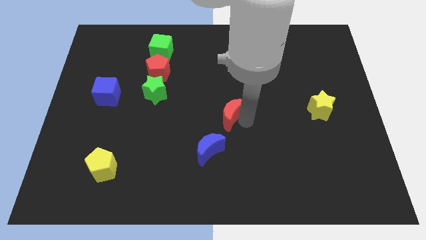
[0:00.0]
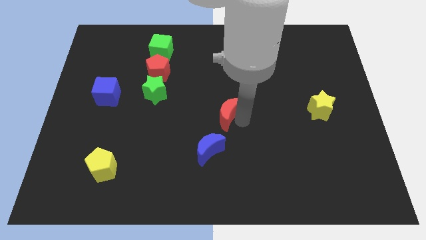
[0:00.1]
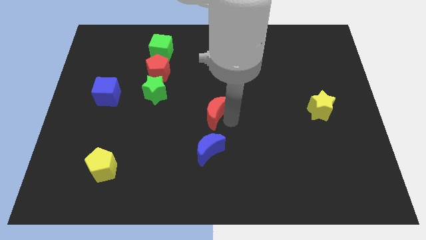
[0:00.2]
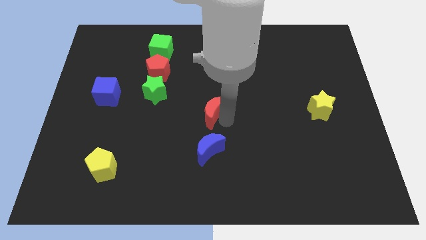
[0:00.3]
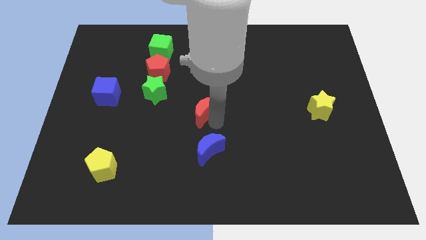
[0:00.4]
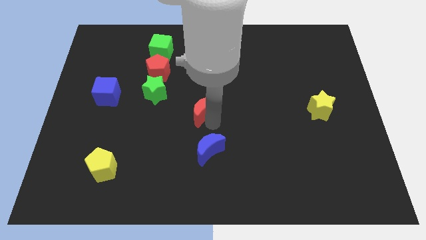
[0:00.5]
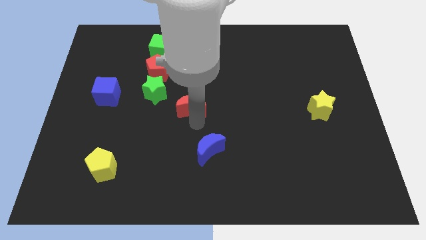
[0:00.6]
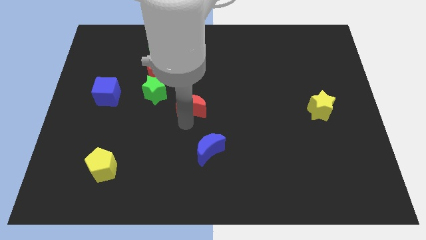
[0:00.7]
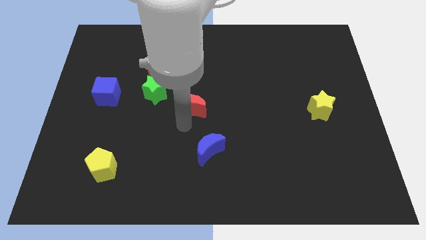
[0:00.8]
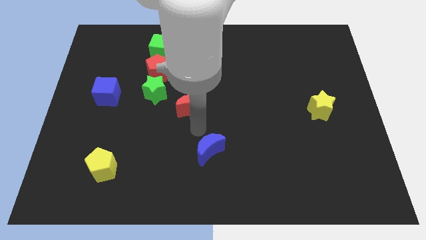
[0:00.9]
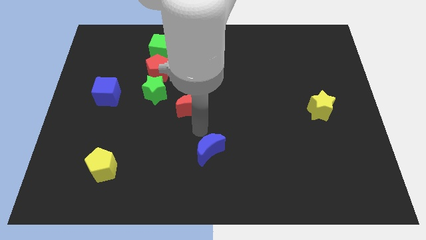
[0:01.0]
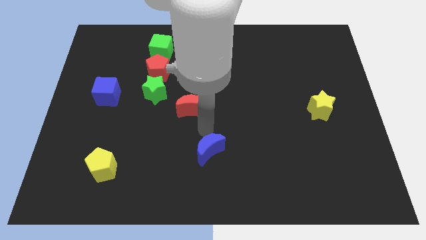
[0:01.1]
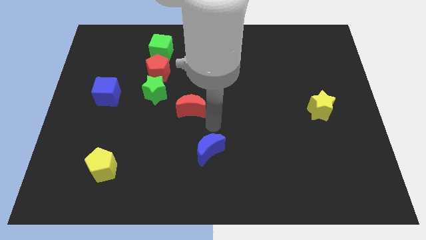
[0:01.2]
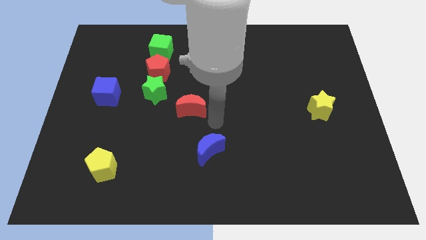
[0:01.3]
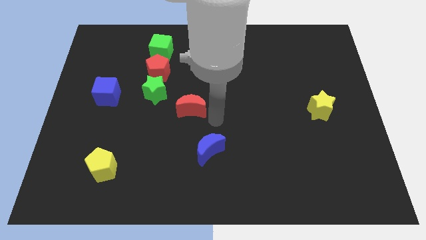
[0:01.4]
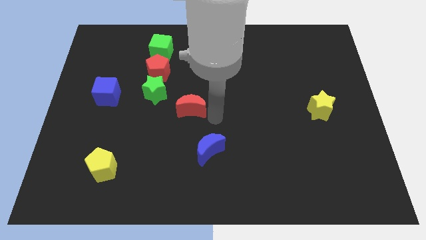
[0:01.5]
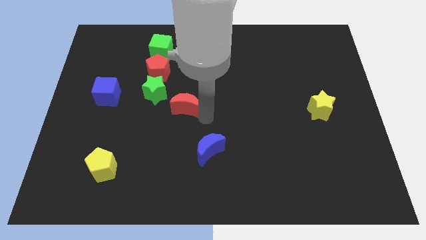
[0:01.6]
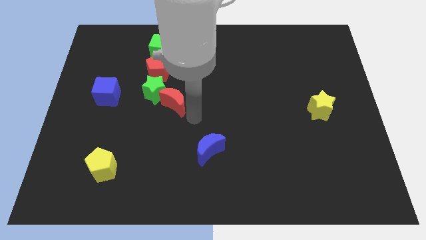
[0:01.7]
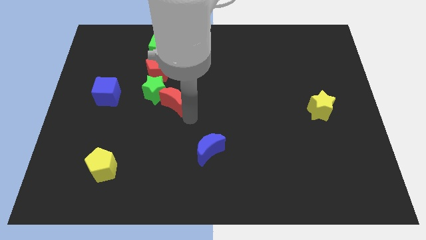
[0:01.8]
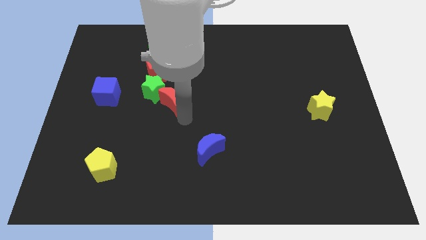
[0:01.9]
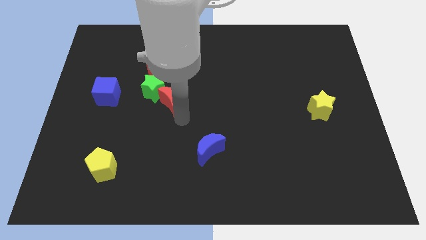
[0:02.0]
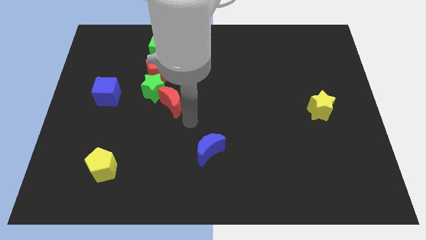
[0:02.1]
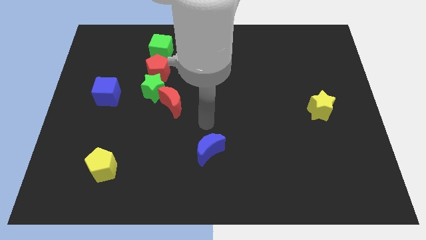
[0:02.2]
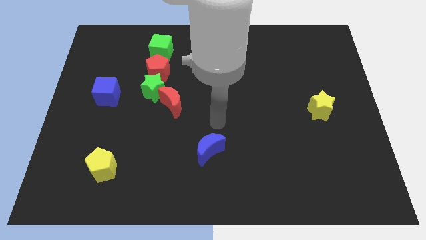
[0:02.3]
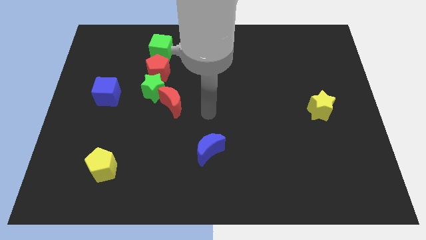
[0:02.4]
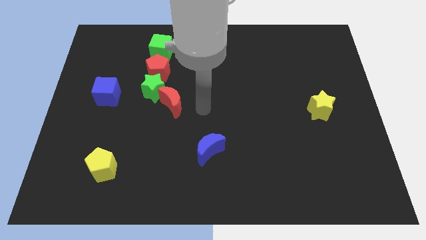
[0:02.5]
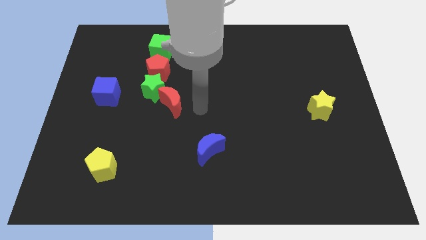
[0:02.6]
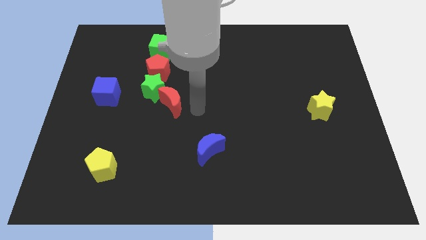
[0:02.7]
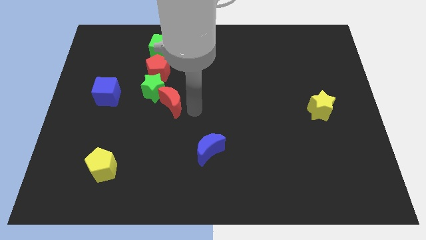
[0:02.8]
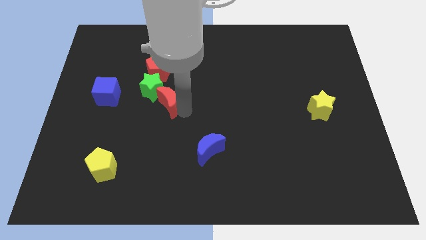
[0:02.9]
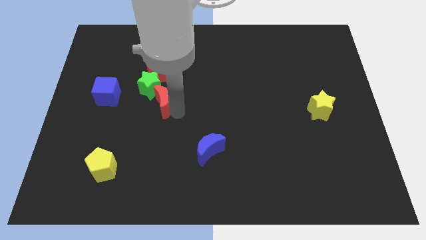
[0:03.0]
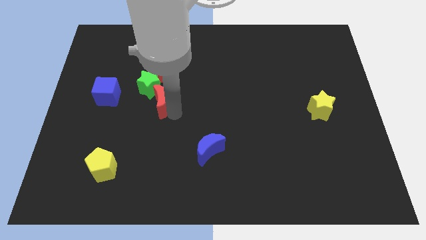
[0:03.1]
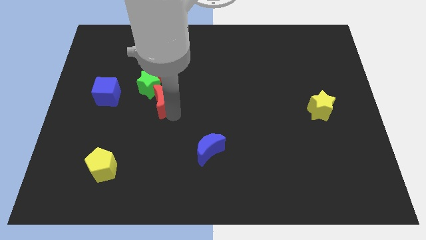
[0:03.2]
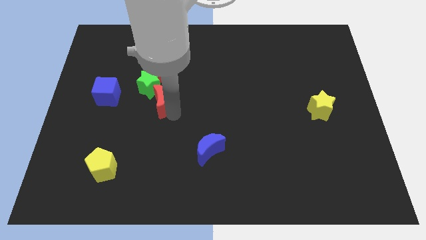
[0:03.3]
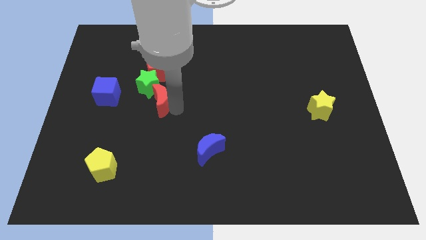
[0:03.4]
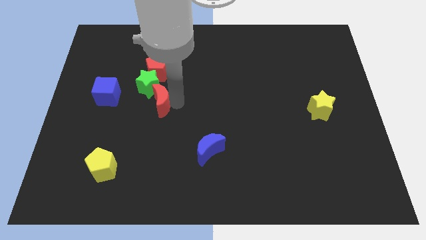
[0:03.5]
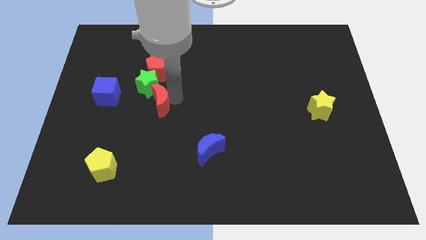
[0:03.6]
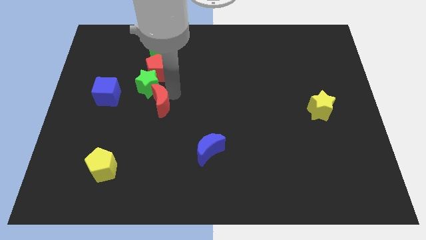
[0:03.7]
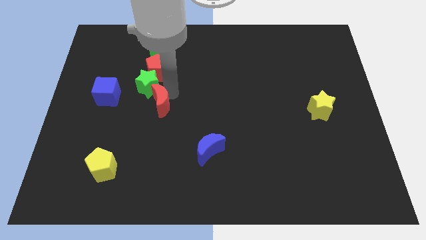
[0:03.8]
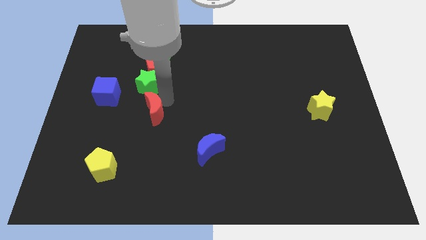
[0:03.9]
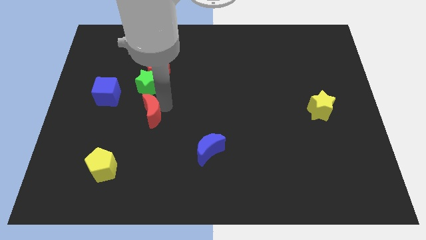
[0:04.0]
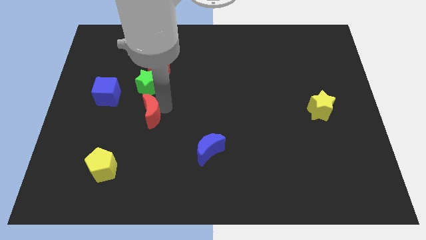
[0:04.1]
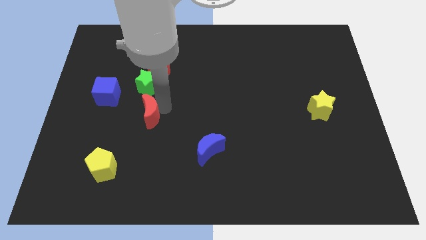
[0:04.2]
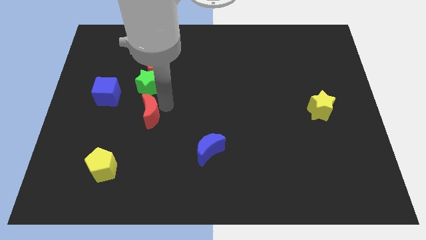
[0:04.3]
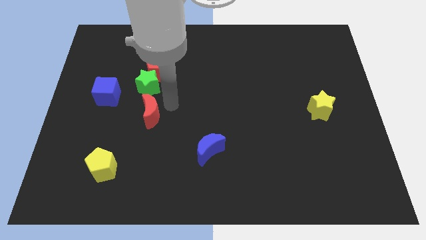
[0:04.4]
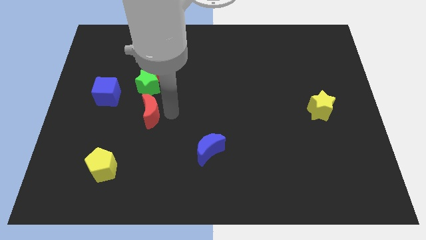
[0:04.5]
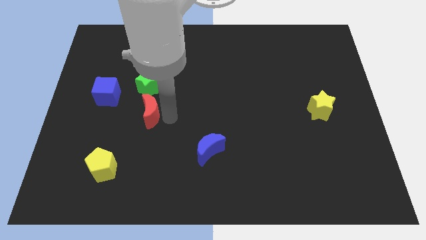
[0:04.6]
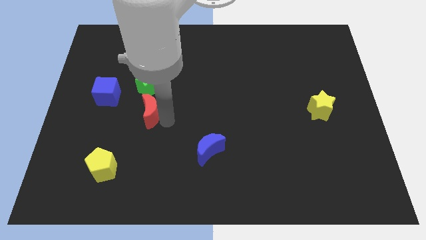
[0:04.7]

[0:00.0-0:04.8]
place the red moon below the green star

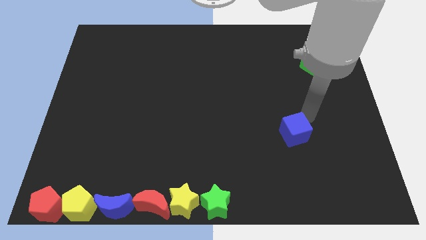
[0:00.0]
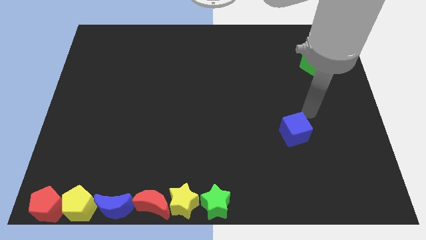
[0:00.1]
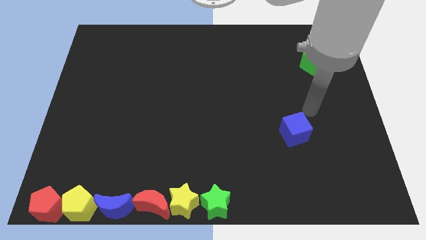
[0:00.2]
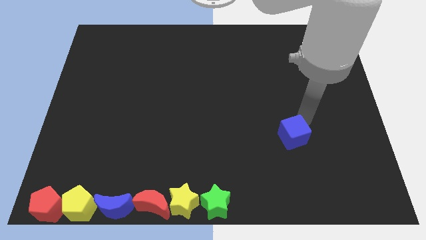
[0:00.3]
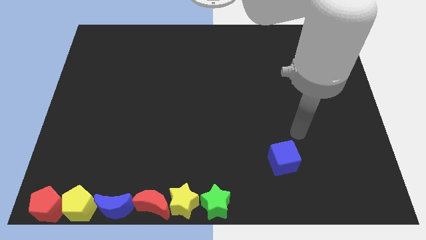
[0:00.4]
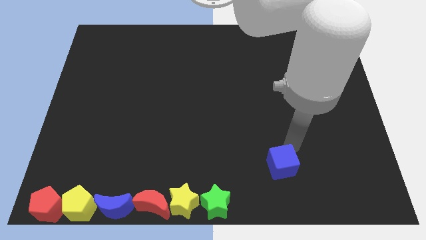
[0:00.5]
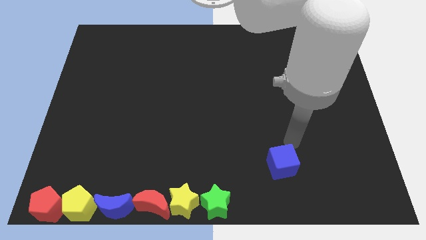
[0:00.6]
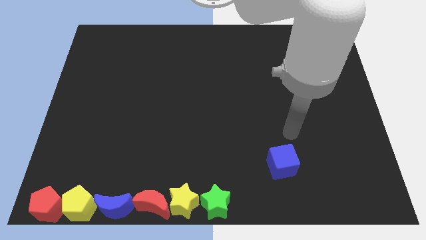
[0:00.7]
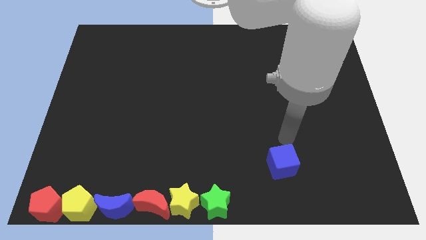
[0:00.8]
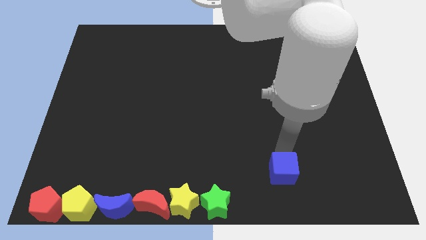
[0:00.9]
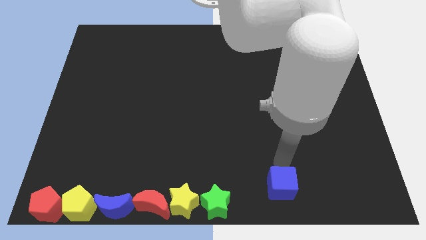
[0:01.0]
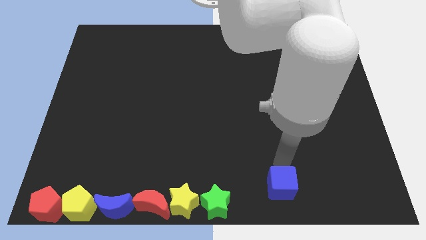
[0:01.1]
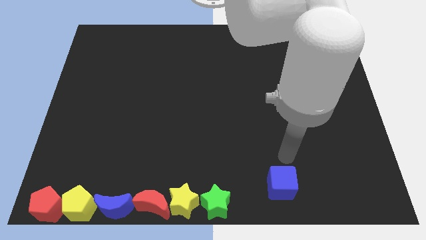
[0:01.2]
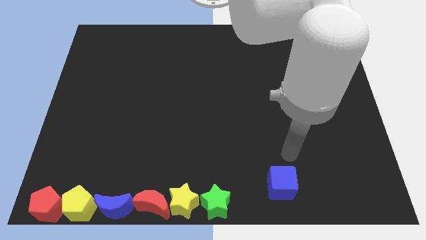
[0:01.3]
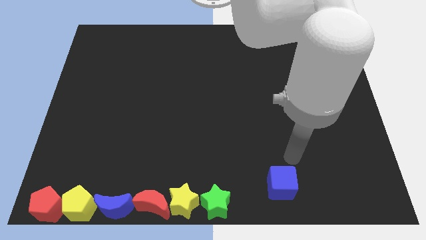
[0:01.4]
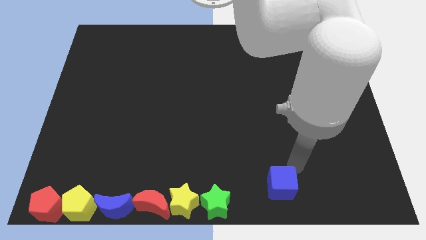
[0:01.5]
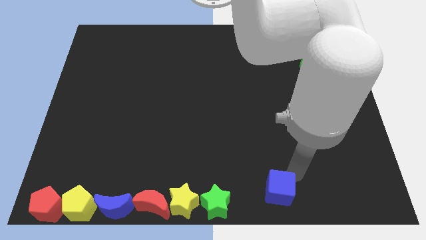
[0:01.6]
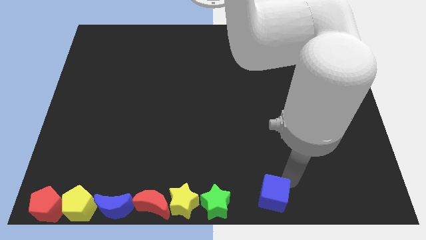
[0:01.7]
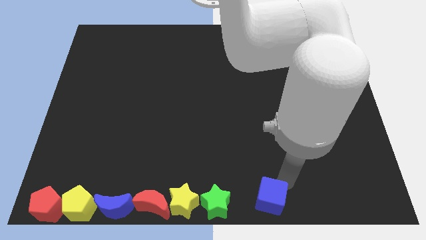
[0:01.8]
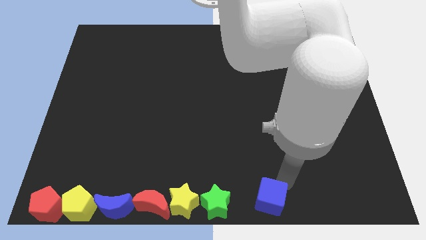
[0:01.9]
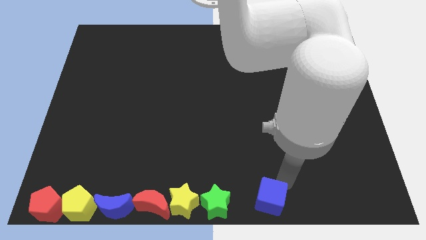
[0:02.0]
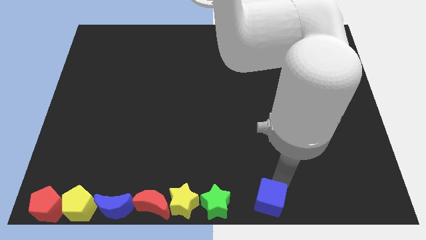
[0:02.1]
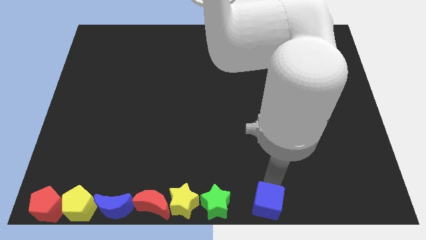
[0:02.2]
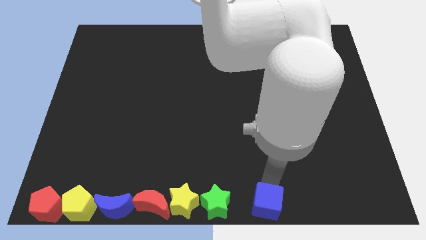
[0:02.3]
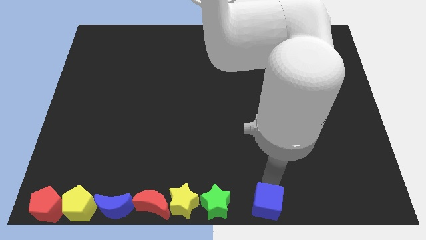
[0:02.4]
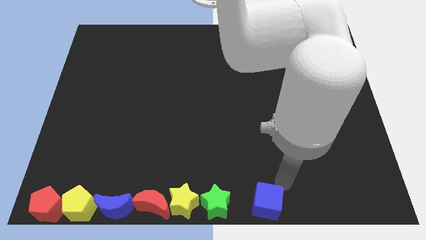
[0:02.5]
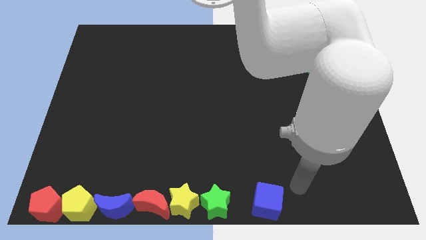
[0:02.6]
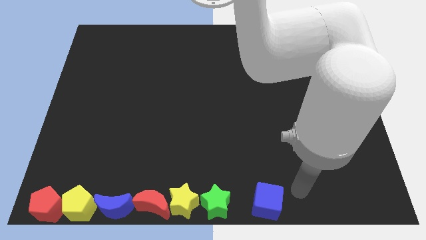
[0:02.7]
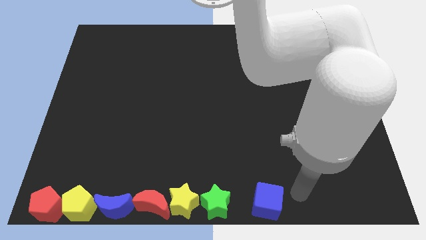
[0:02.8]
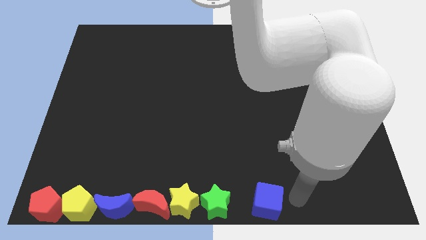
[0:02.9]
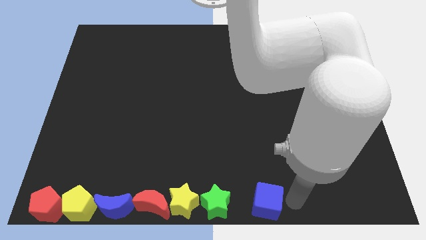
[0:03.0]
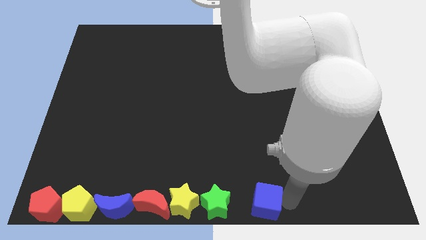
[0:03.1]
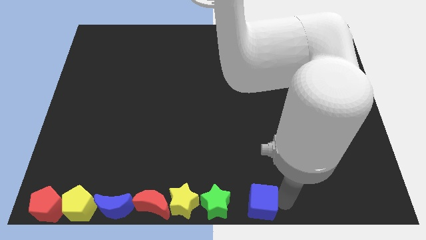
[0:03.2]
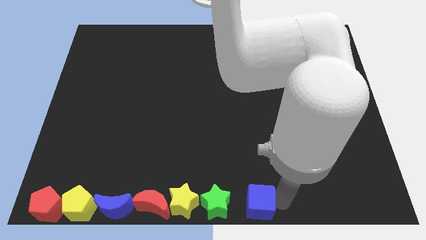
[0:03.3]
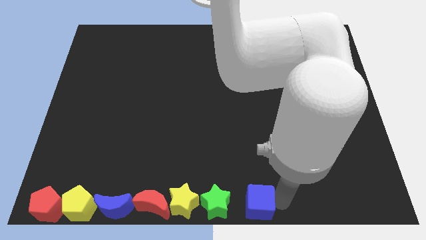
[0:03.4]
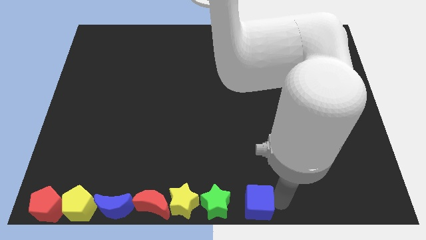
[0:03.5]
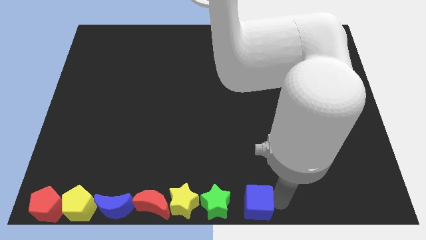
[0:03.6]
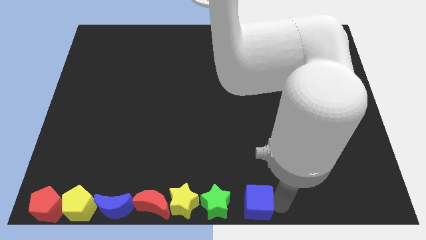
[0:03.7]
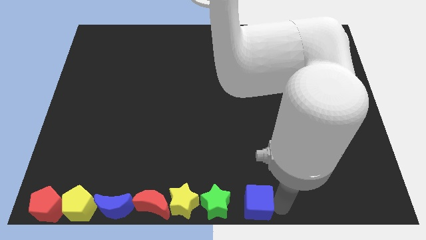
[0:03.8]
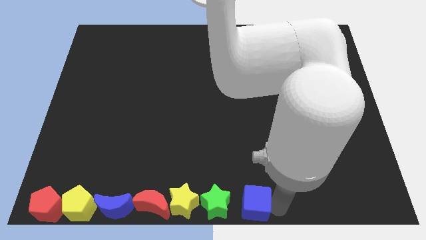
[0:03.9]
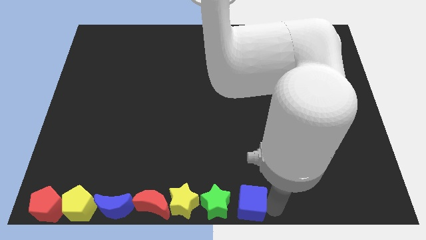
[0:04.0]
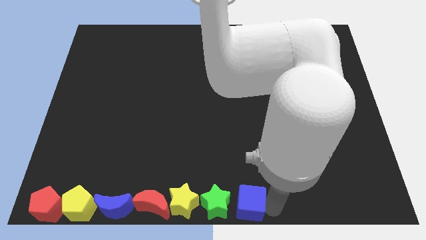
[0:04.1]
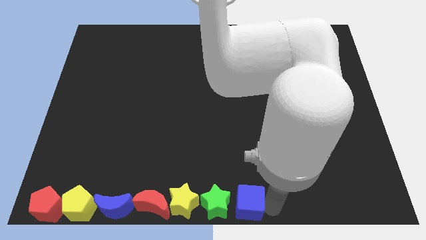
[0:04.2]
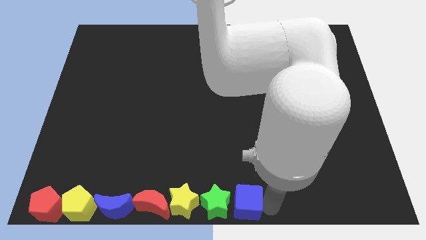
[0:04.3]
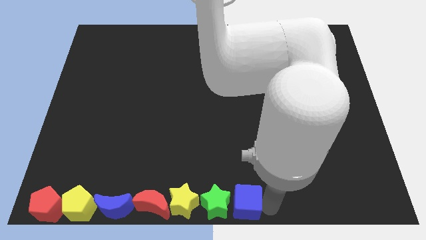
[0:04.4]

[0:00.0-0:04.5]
put the blue cube right to the green star
